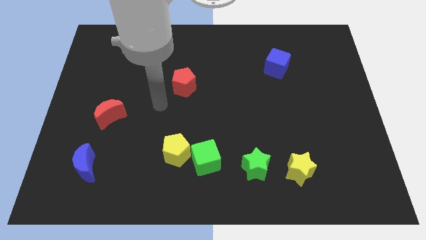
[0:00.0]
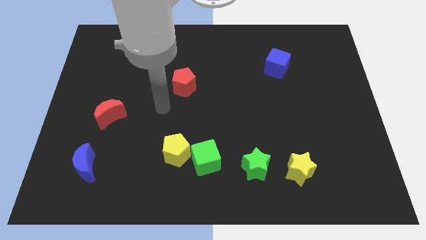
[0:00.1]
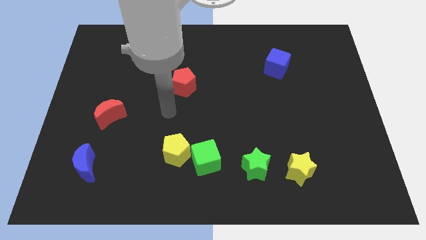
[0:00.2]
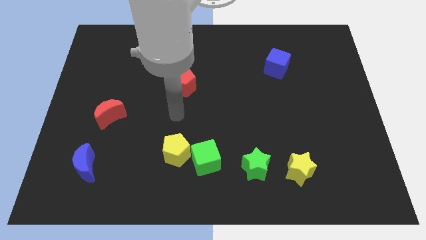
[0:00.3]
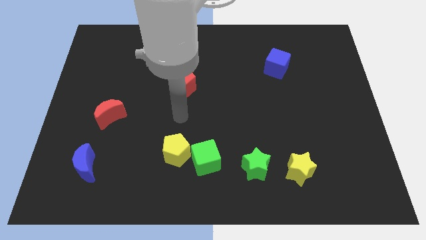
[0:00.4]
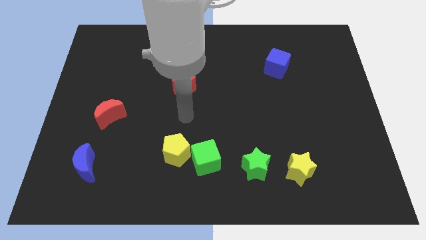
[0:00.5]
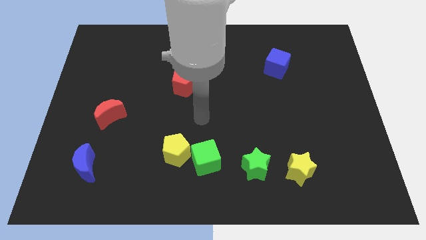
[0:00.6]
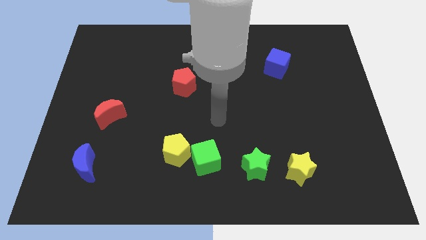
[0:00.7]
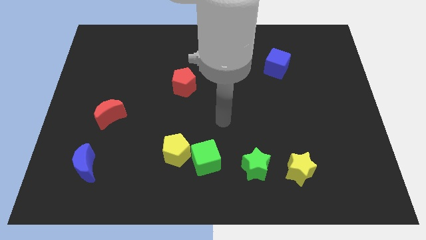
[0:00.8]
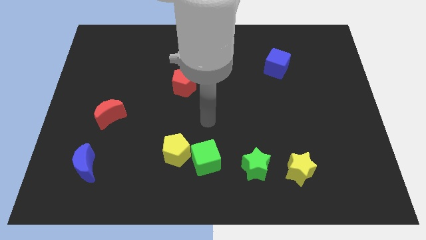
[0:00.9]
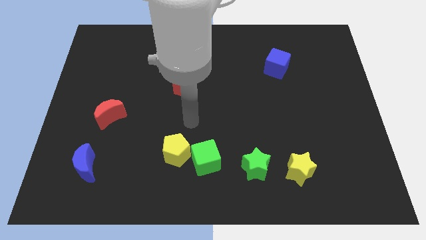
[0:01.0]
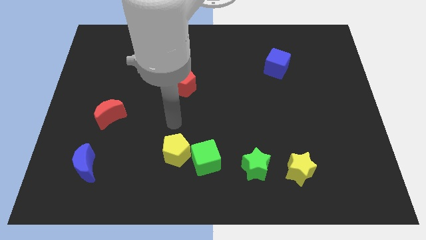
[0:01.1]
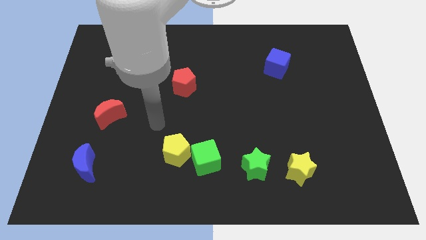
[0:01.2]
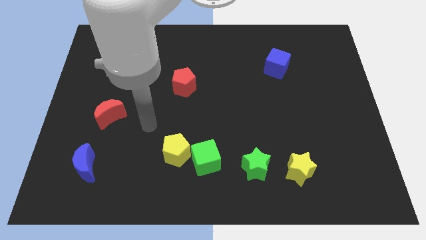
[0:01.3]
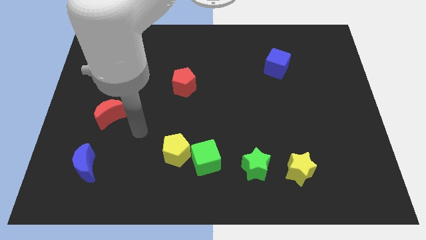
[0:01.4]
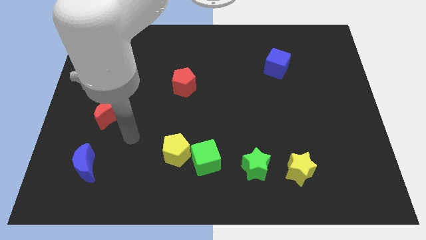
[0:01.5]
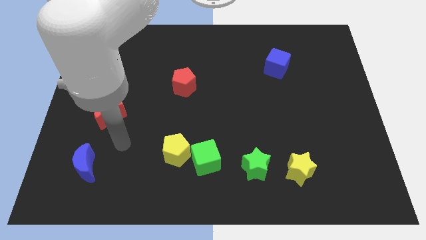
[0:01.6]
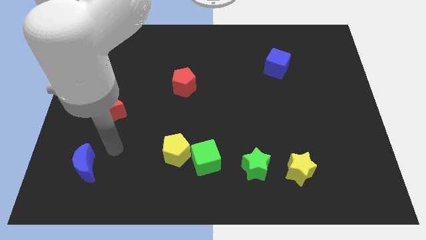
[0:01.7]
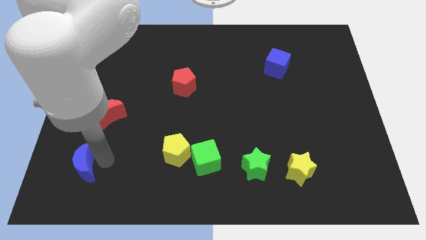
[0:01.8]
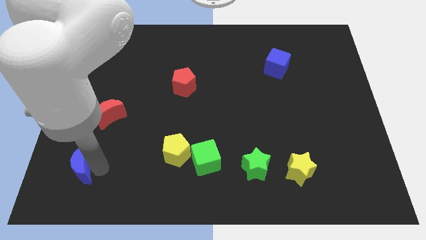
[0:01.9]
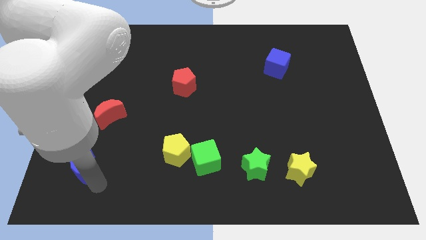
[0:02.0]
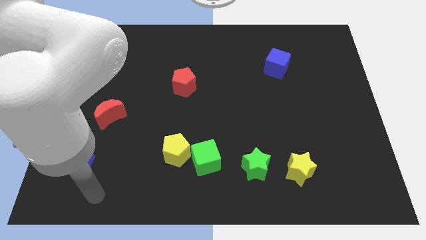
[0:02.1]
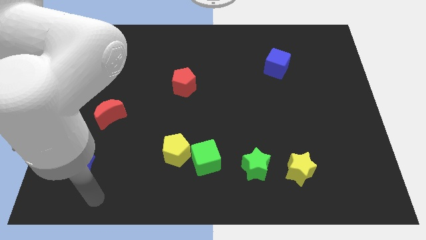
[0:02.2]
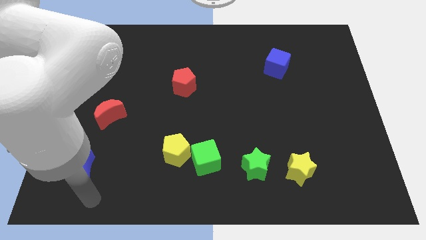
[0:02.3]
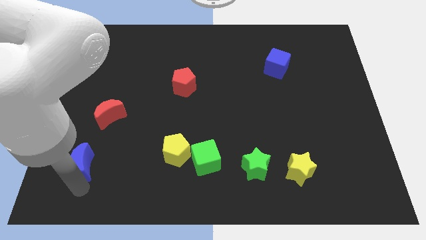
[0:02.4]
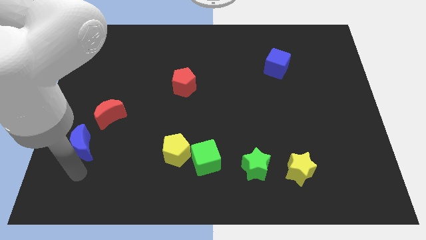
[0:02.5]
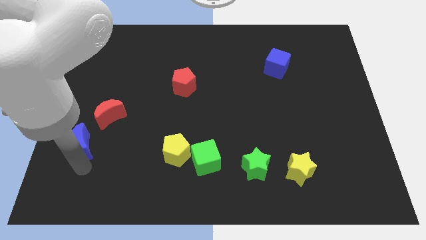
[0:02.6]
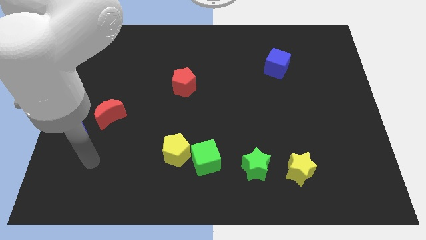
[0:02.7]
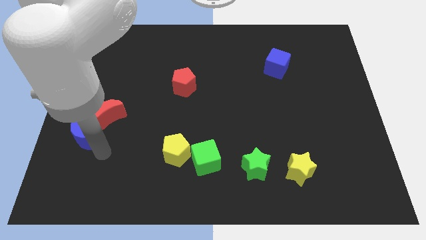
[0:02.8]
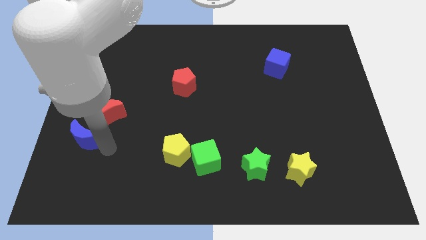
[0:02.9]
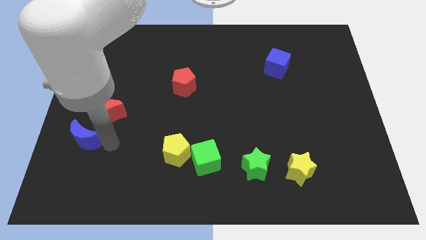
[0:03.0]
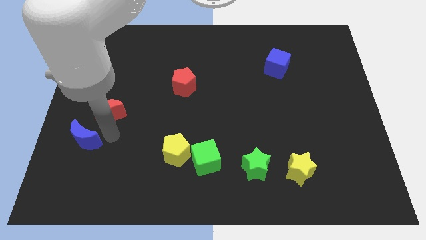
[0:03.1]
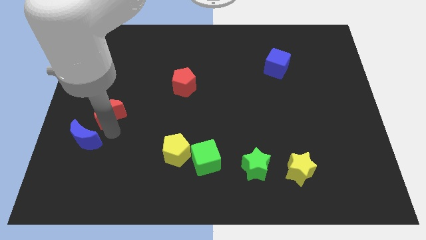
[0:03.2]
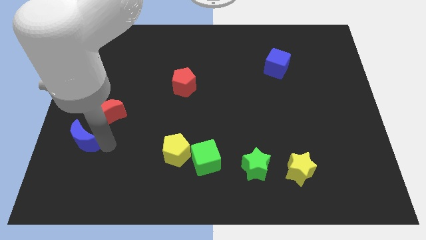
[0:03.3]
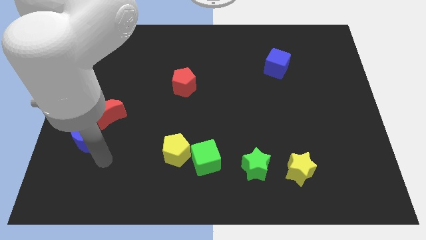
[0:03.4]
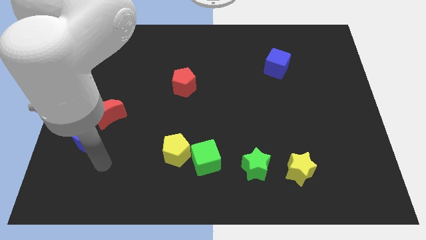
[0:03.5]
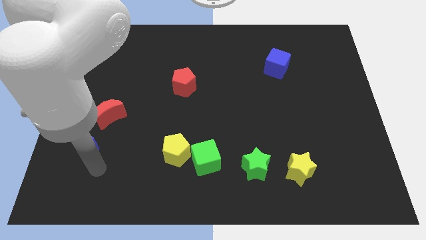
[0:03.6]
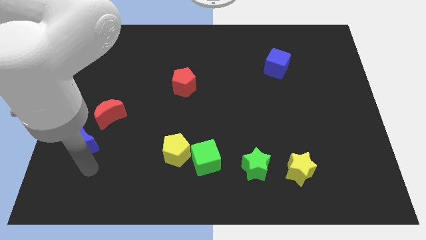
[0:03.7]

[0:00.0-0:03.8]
move the blue crescent to the bottom of red crescent

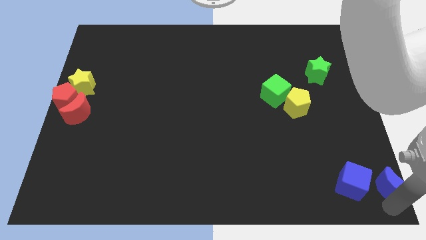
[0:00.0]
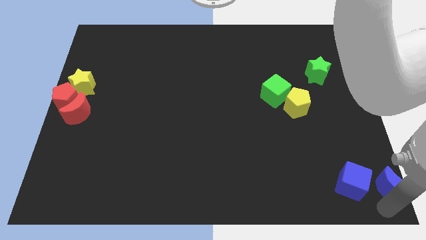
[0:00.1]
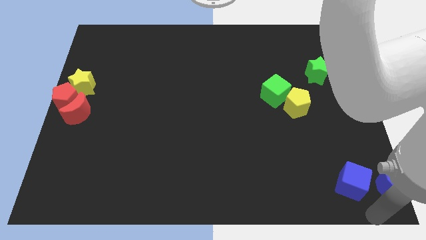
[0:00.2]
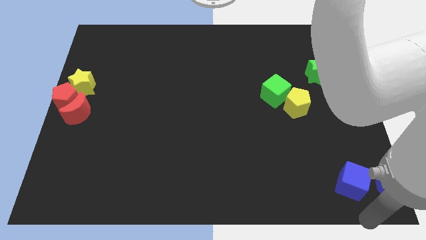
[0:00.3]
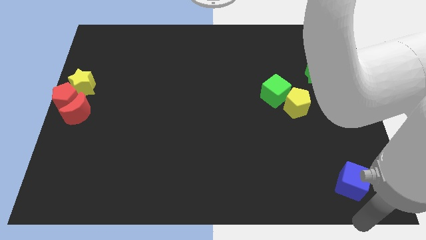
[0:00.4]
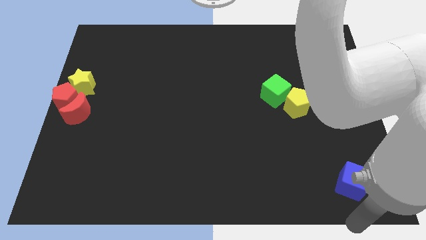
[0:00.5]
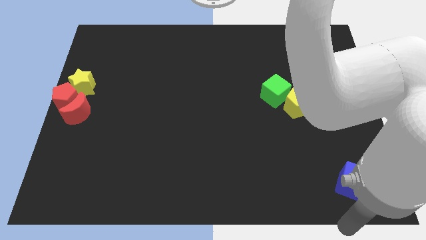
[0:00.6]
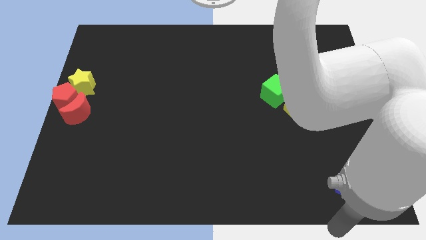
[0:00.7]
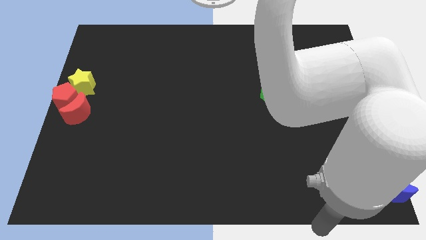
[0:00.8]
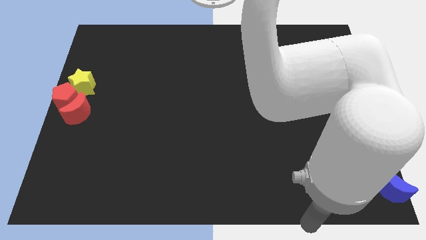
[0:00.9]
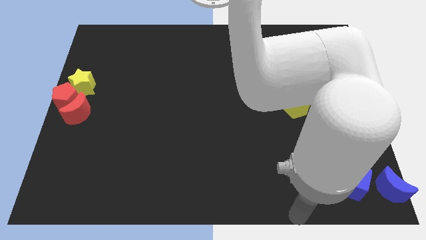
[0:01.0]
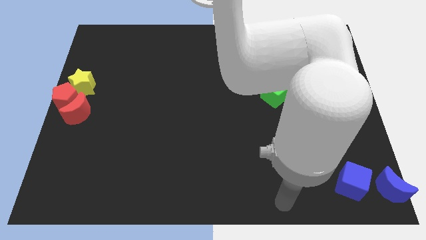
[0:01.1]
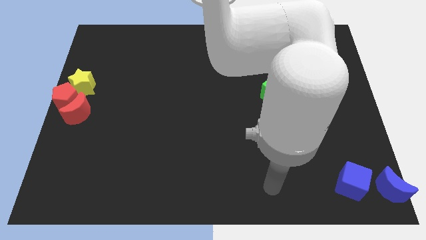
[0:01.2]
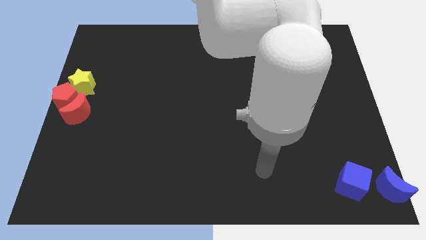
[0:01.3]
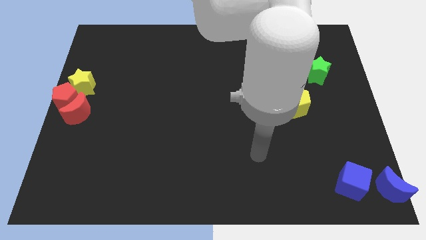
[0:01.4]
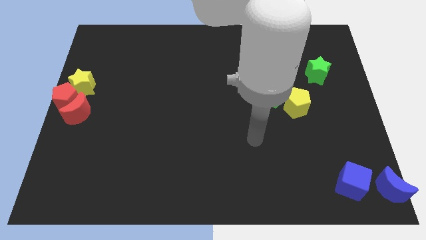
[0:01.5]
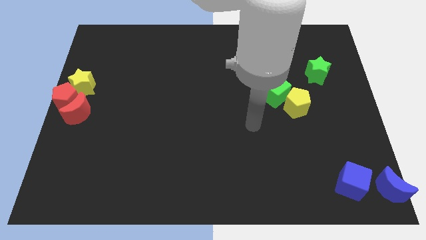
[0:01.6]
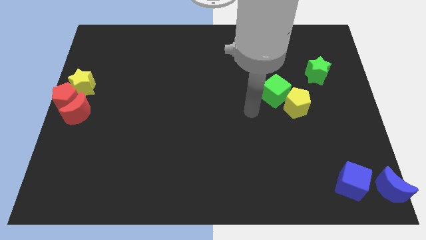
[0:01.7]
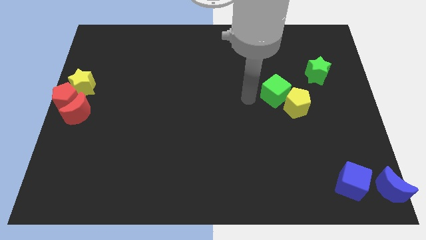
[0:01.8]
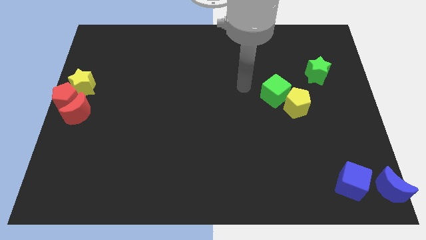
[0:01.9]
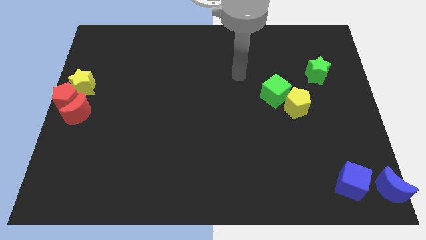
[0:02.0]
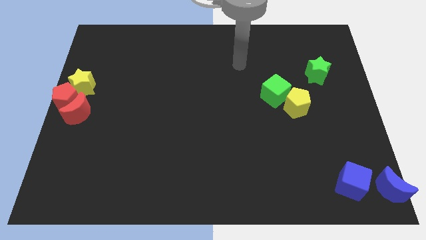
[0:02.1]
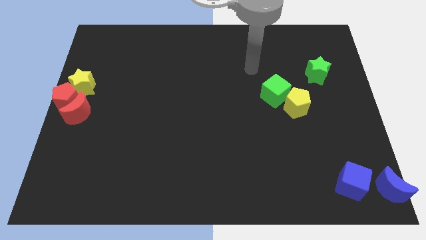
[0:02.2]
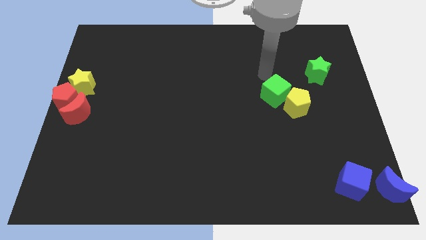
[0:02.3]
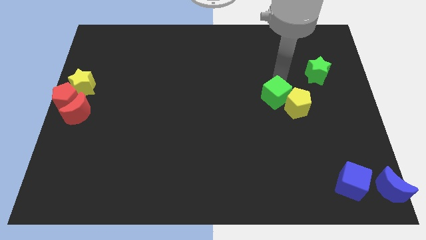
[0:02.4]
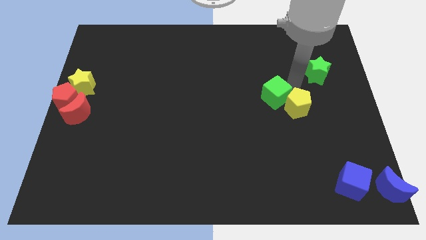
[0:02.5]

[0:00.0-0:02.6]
go away from the blue moon

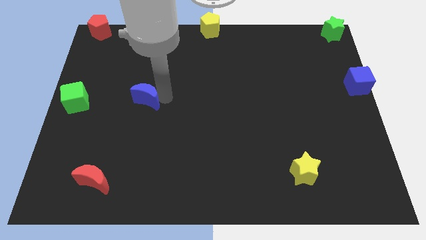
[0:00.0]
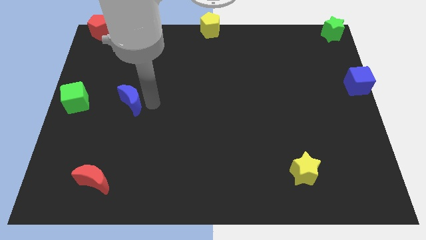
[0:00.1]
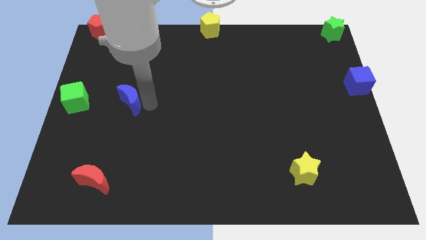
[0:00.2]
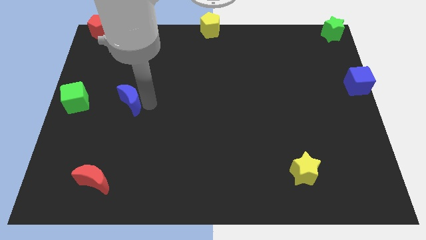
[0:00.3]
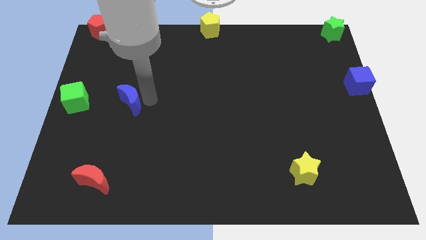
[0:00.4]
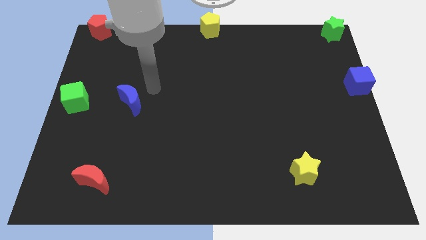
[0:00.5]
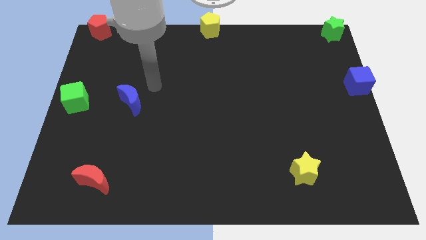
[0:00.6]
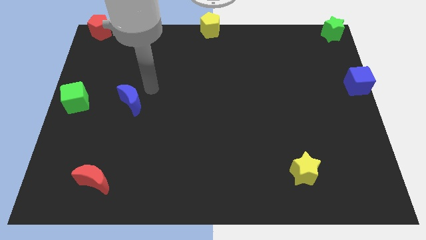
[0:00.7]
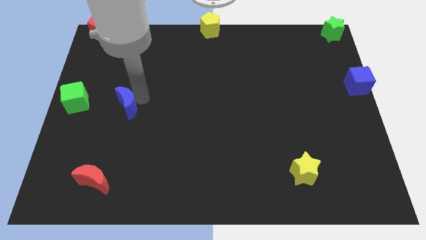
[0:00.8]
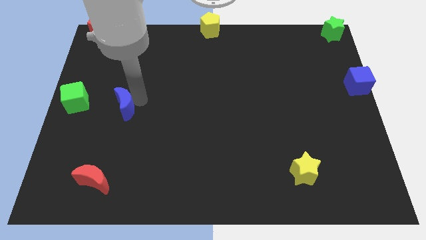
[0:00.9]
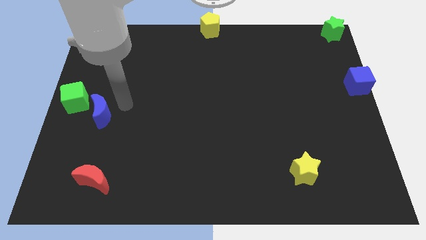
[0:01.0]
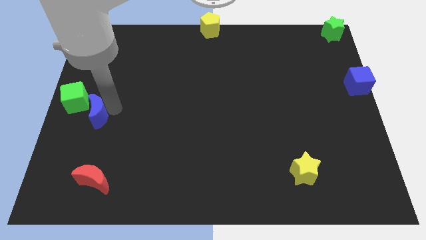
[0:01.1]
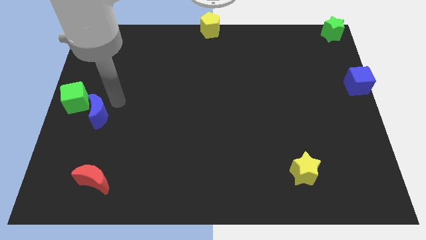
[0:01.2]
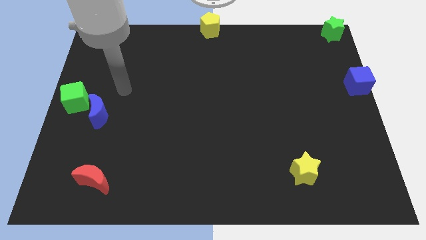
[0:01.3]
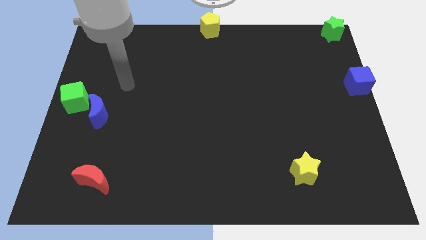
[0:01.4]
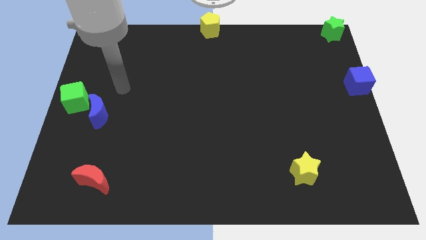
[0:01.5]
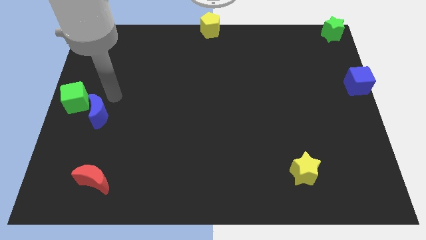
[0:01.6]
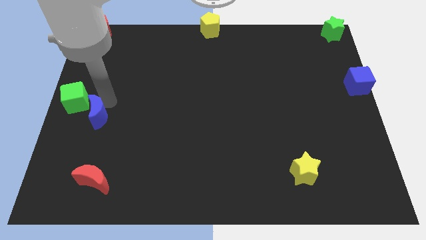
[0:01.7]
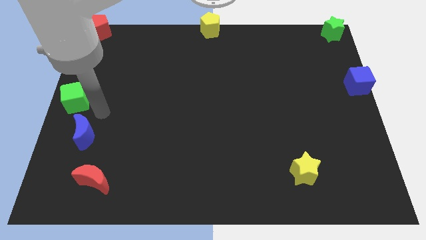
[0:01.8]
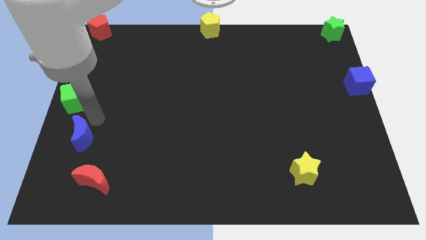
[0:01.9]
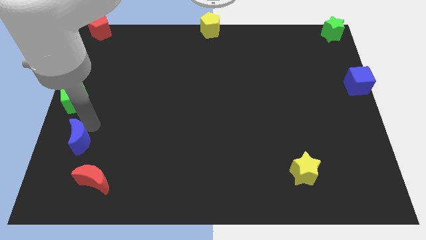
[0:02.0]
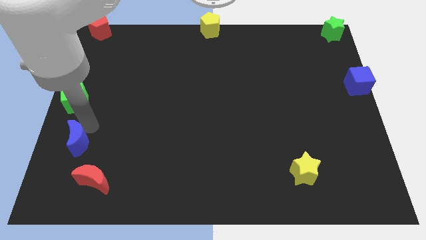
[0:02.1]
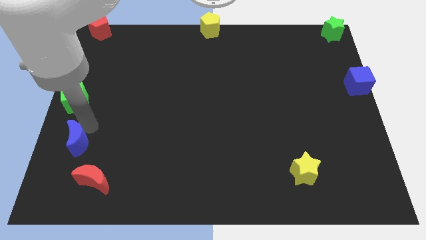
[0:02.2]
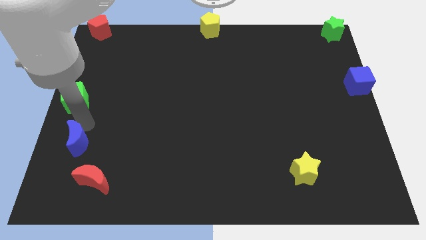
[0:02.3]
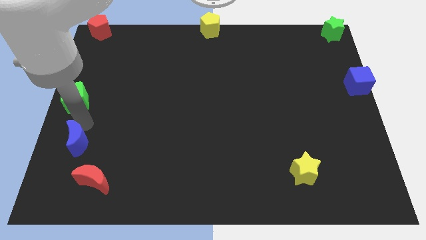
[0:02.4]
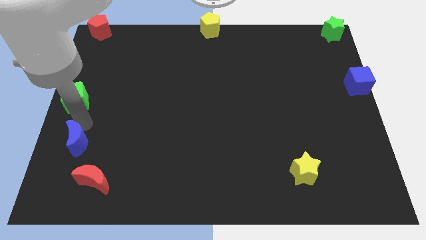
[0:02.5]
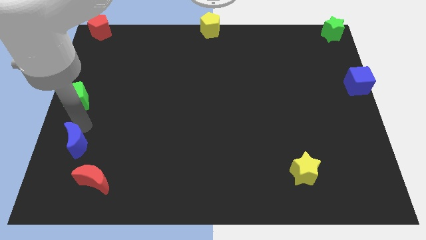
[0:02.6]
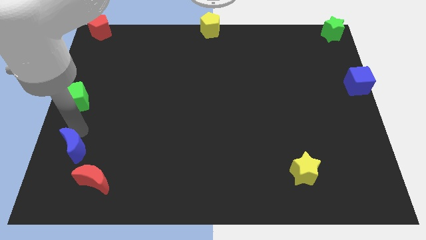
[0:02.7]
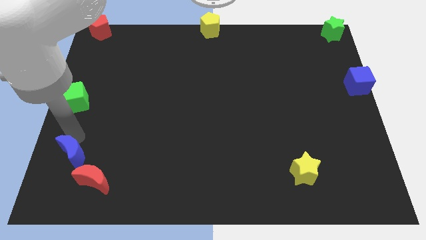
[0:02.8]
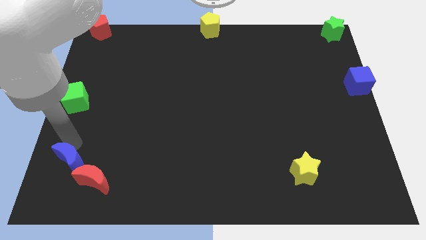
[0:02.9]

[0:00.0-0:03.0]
push the blue crescent close to the red crescent
